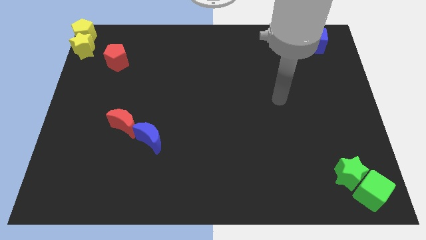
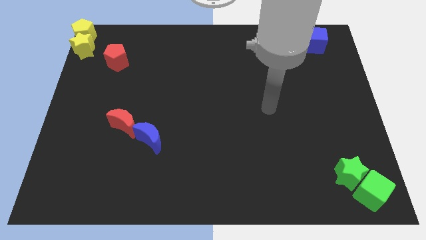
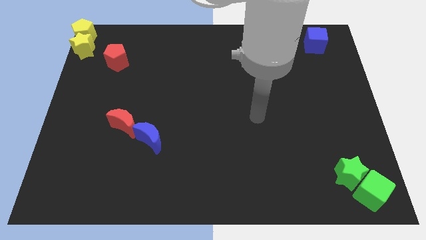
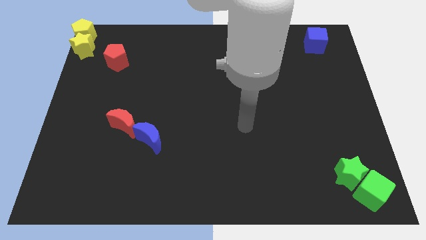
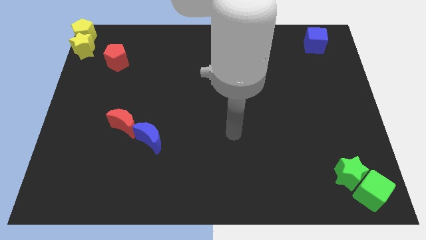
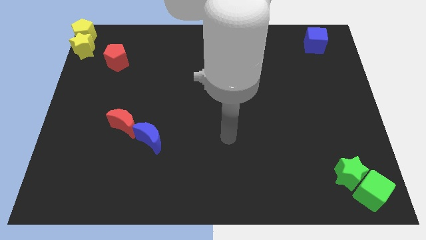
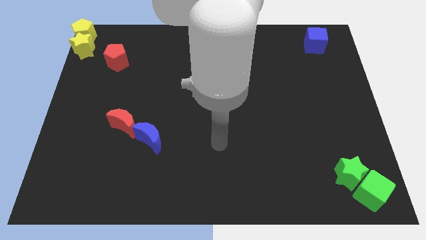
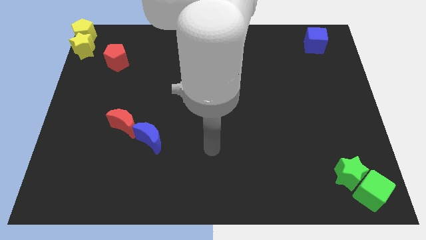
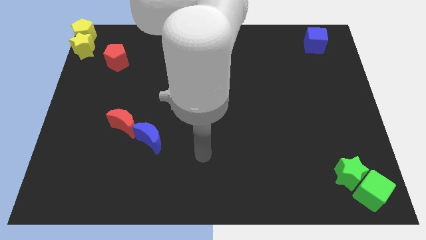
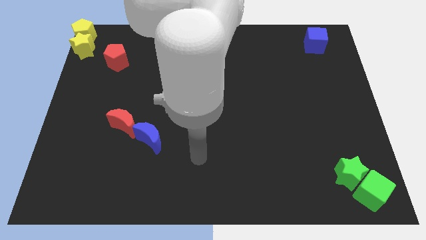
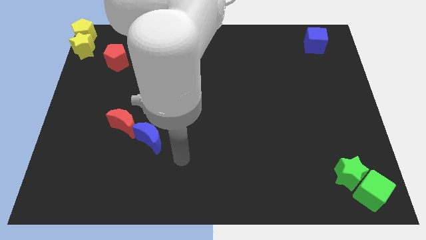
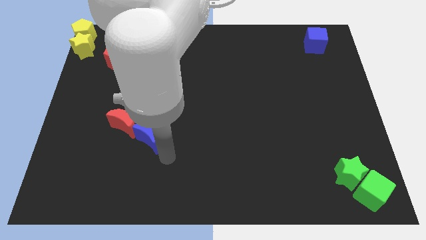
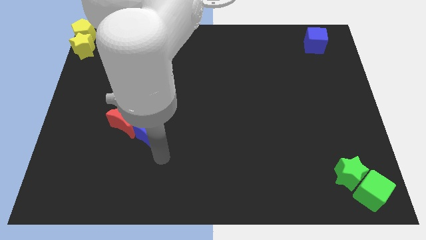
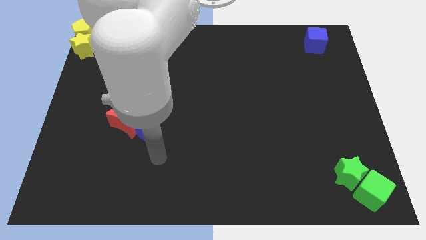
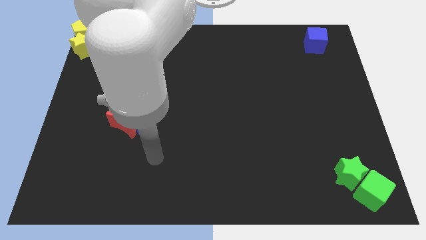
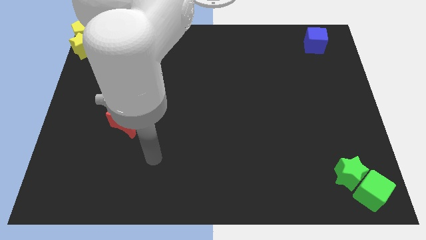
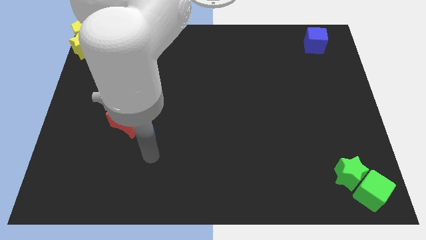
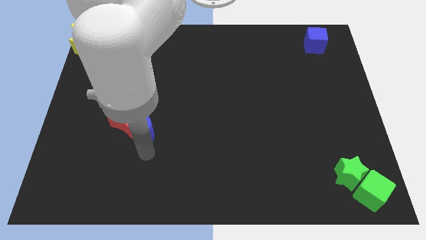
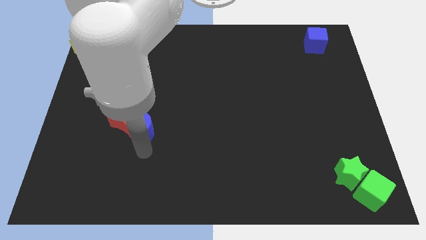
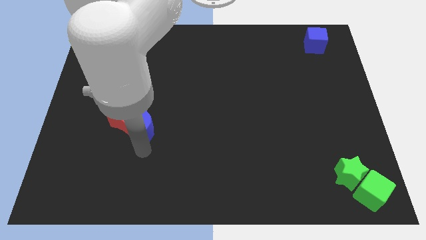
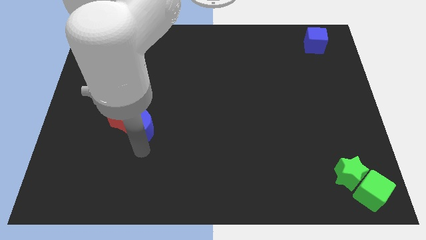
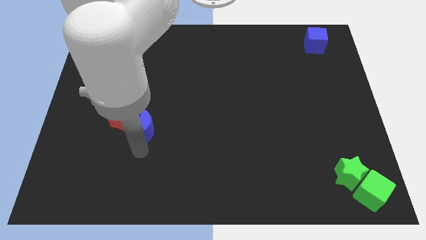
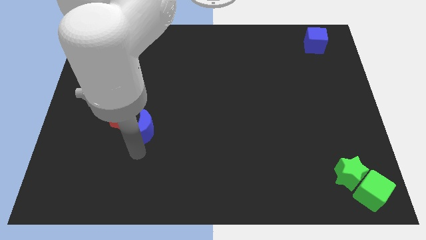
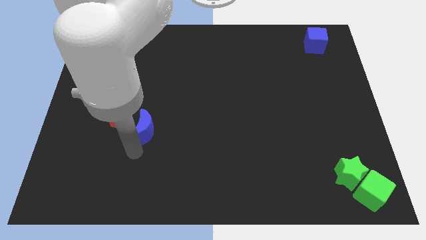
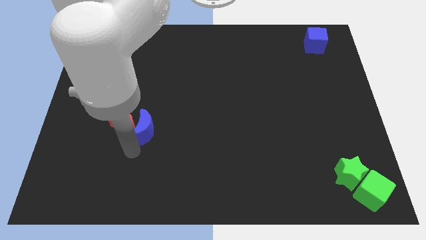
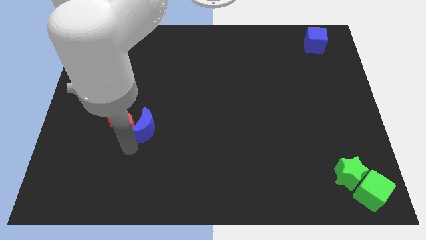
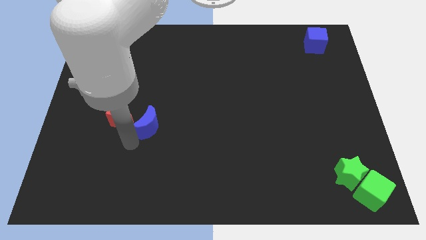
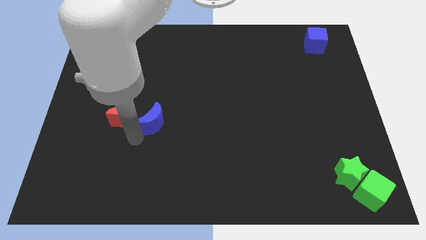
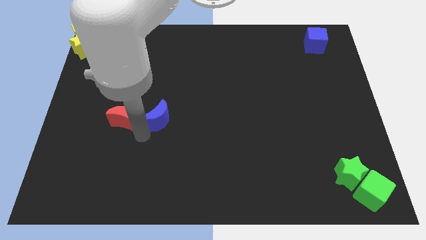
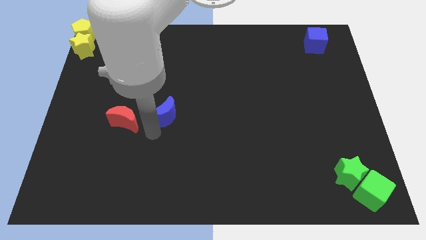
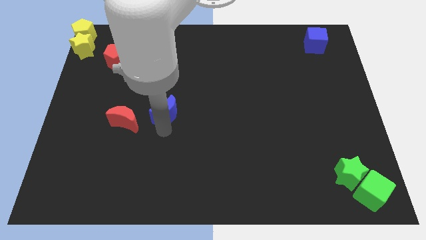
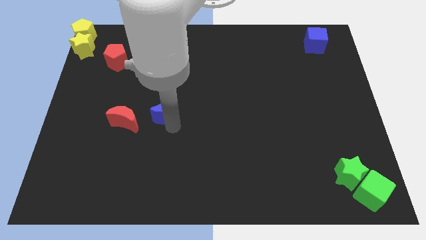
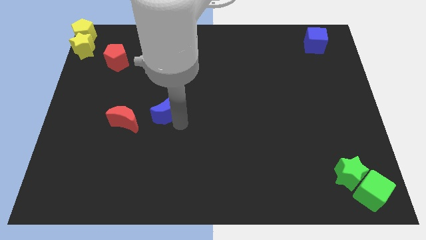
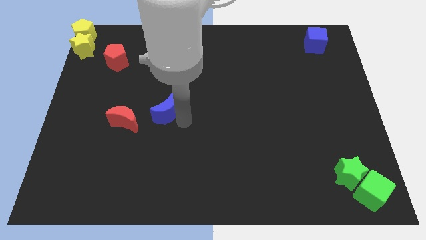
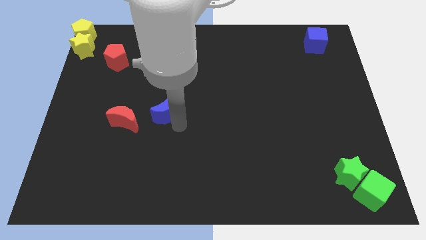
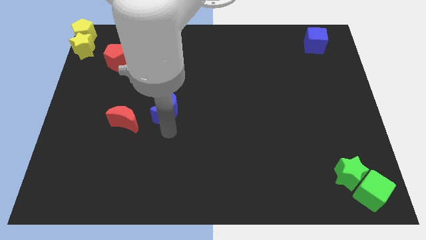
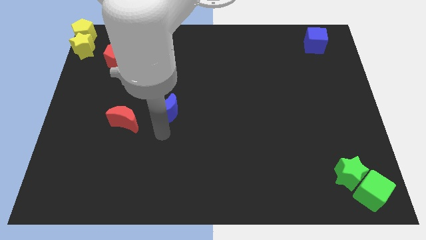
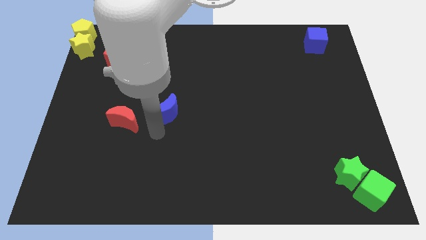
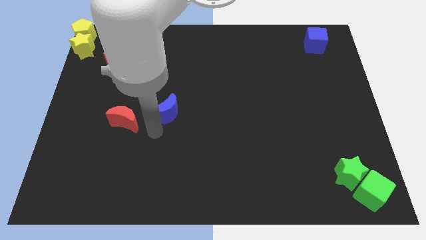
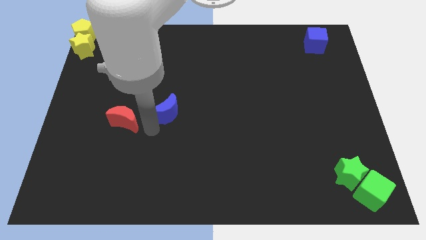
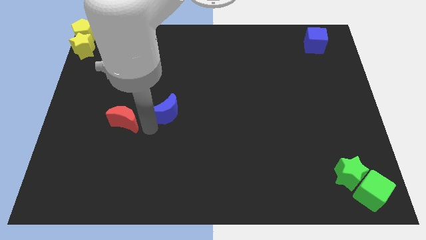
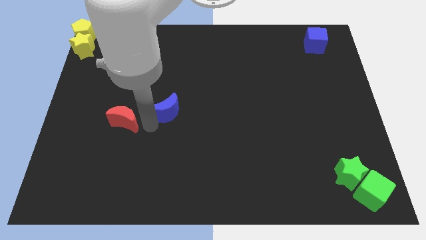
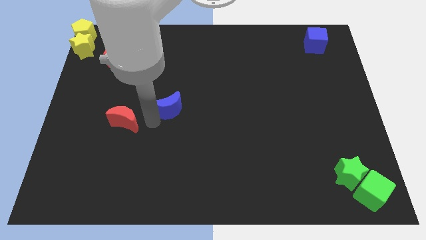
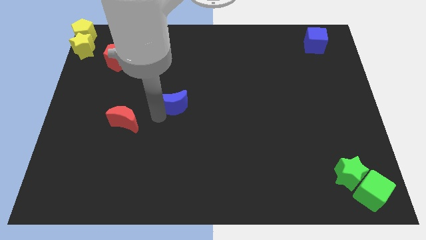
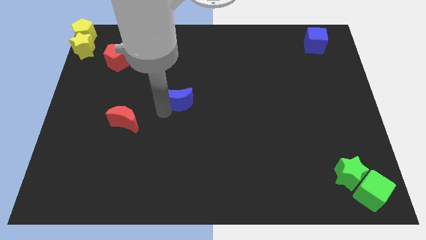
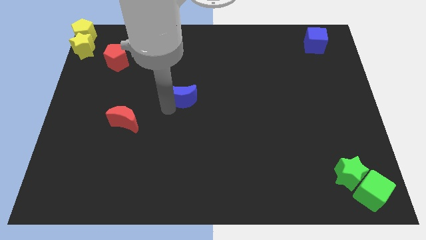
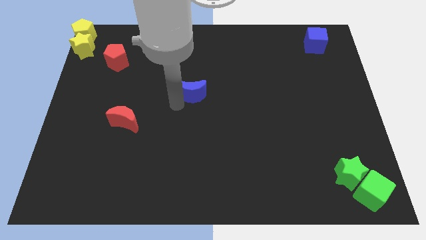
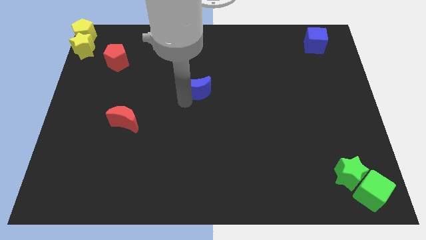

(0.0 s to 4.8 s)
separate the blue moon from the red moon

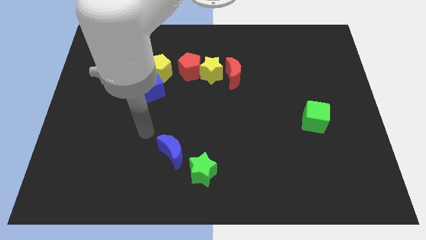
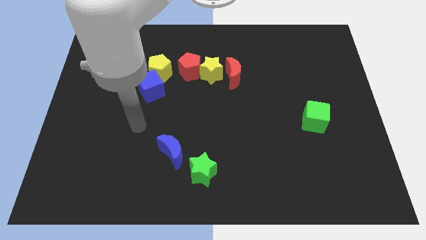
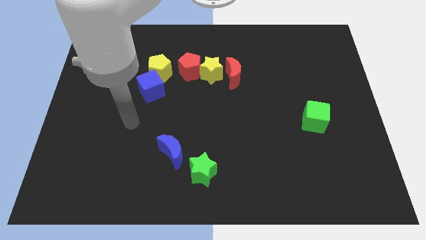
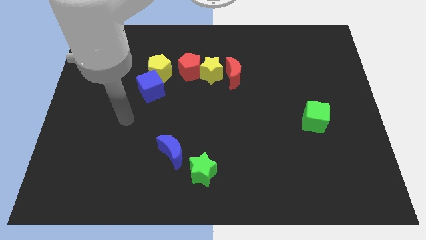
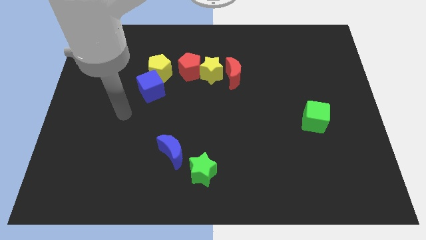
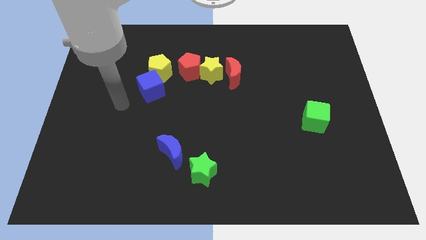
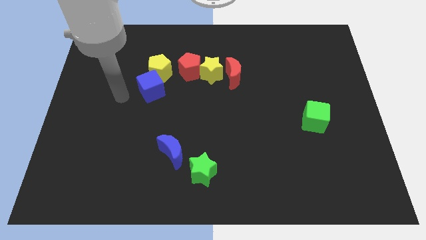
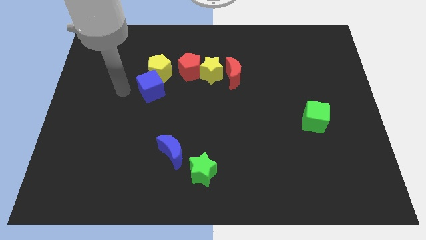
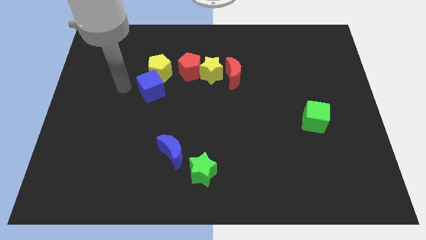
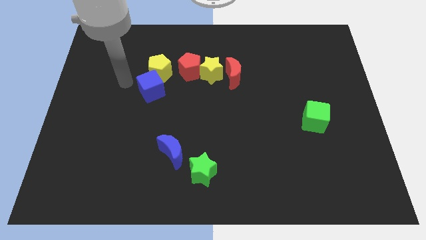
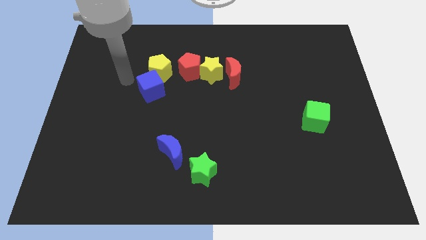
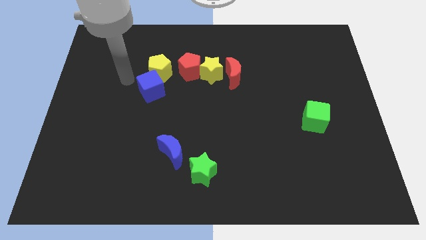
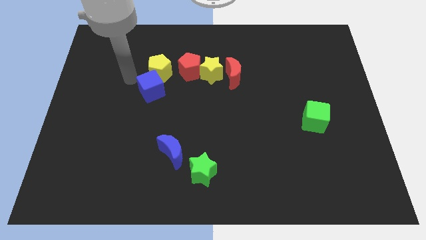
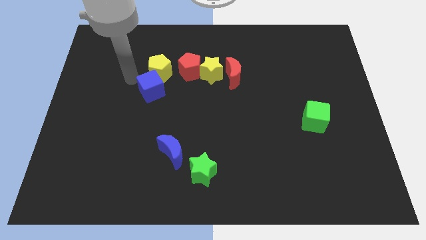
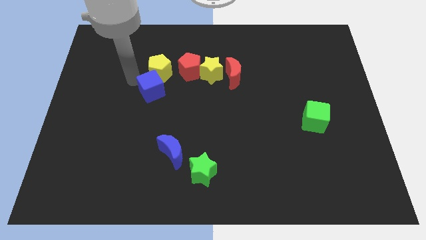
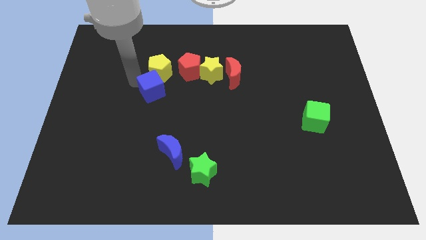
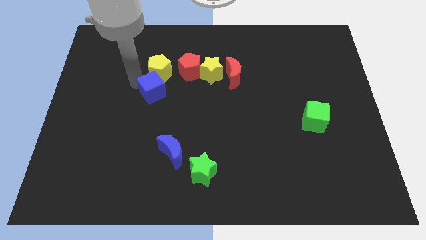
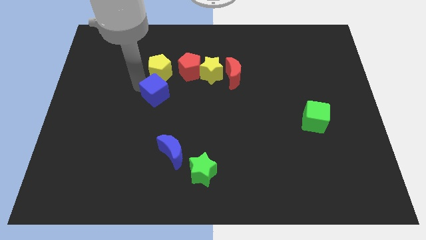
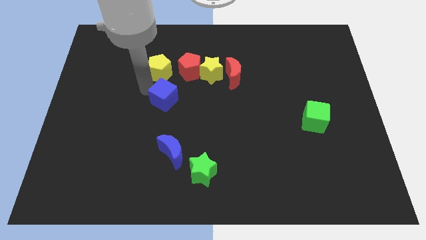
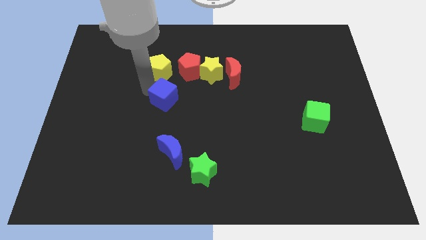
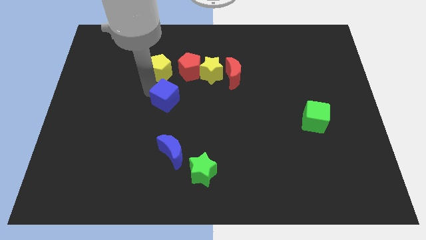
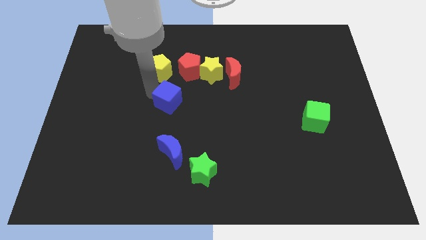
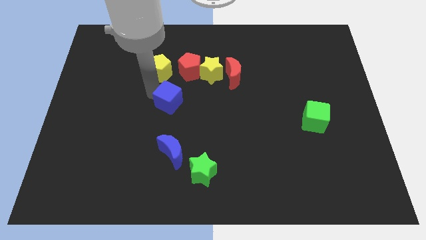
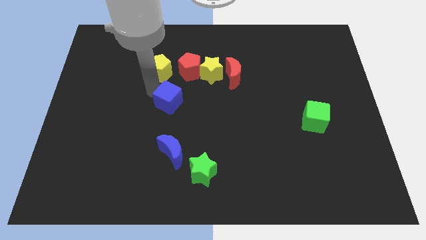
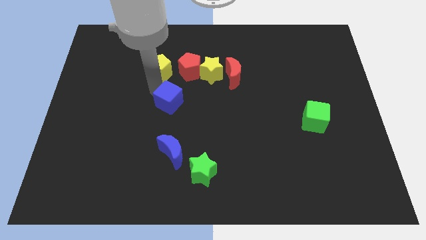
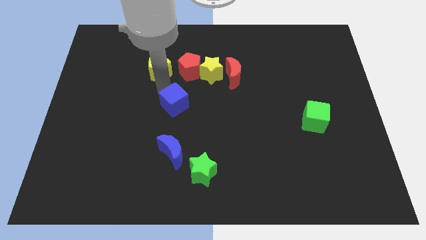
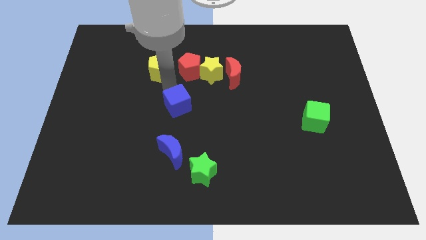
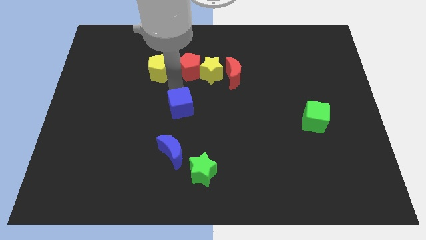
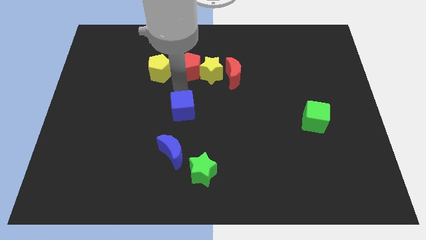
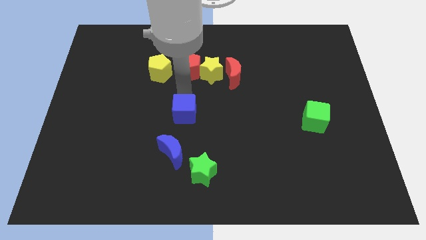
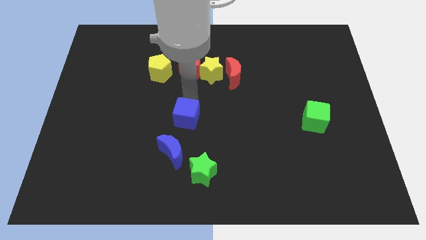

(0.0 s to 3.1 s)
push the blue cube to the center of the board

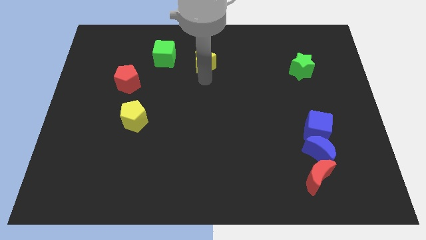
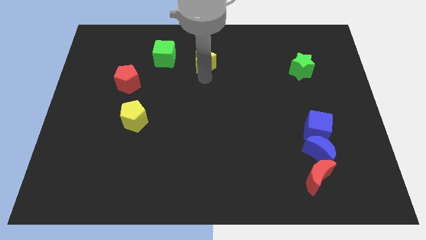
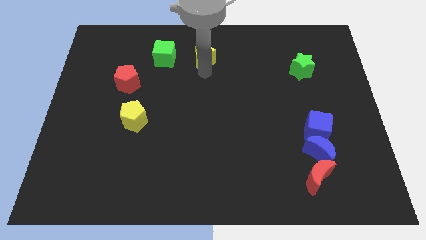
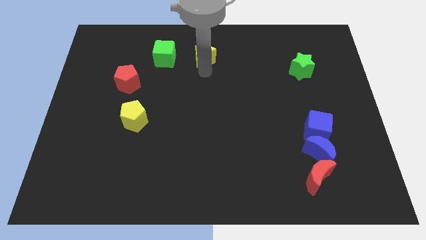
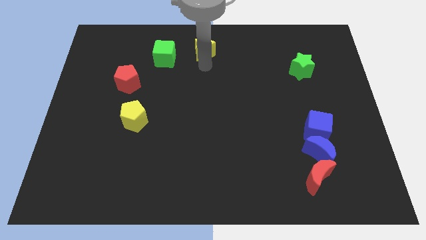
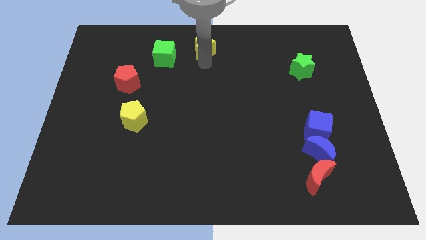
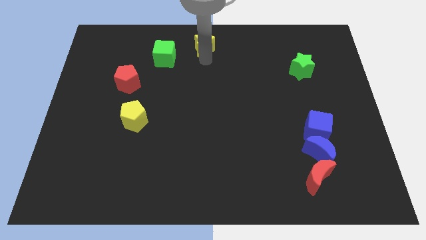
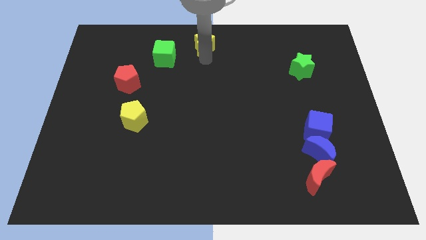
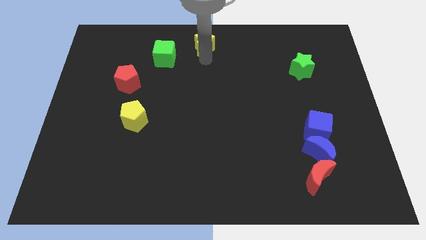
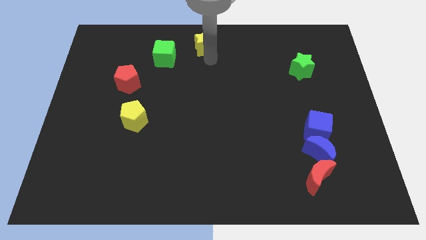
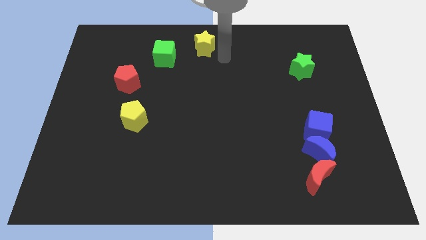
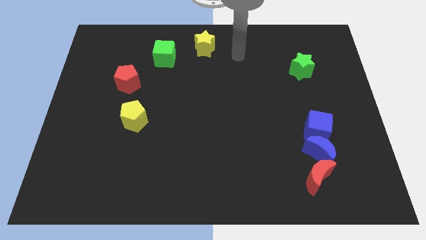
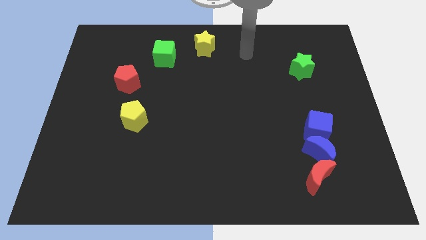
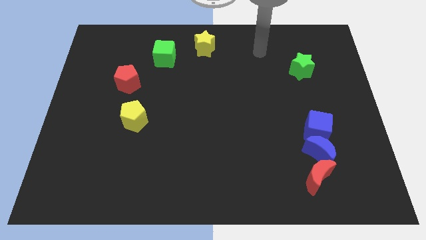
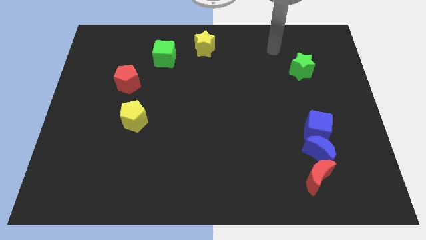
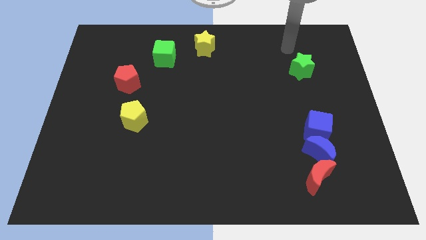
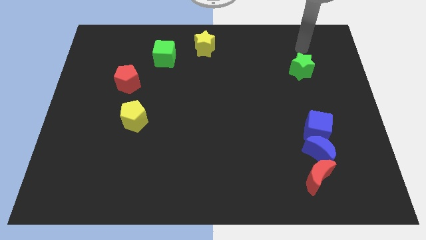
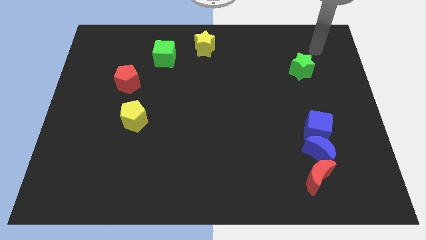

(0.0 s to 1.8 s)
push the yellow star to top center
